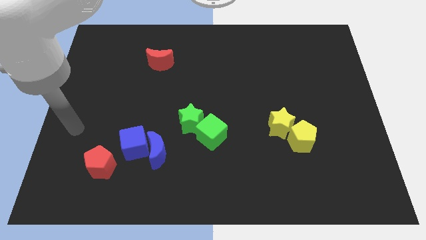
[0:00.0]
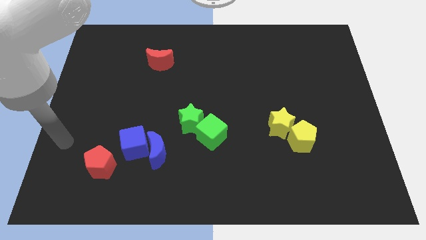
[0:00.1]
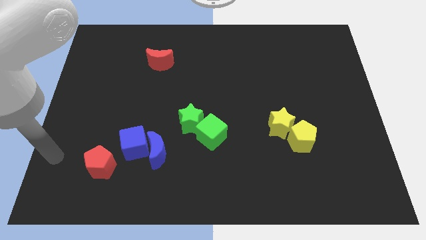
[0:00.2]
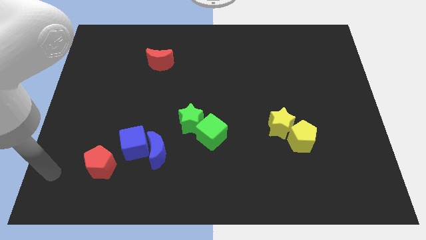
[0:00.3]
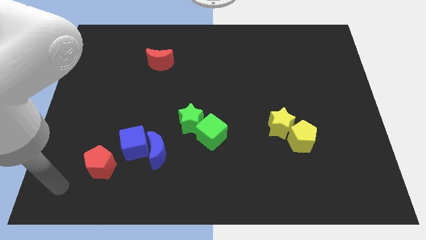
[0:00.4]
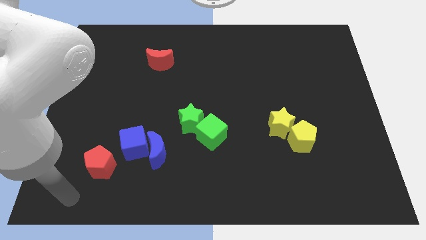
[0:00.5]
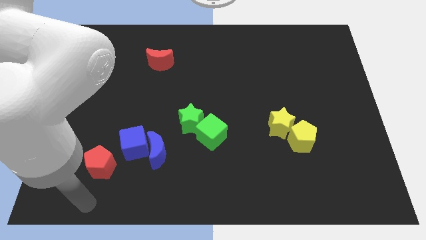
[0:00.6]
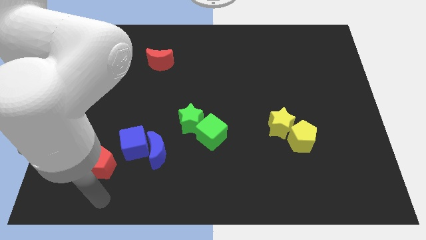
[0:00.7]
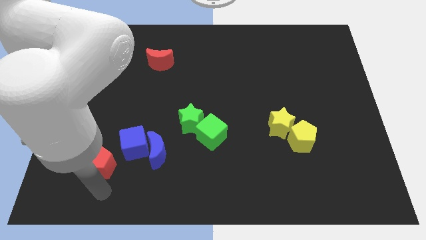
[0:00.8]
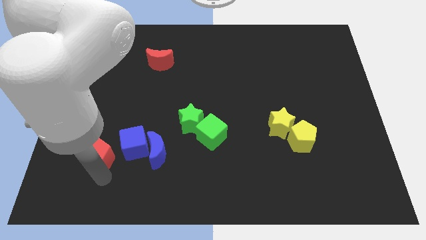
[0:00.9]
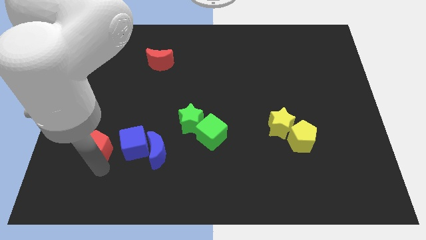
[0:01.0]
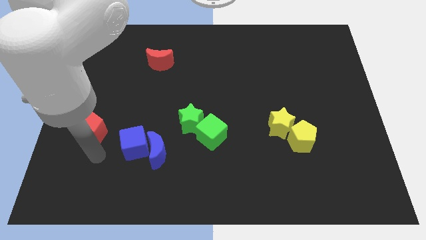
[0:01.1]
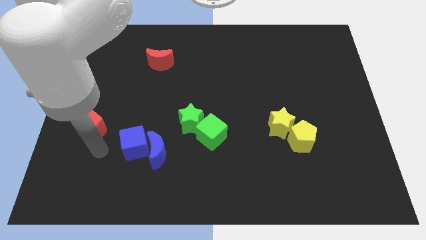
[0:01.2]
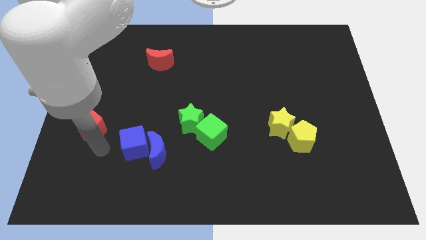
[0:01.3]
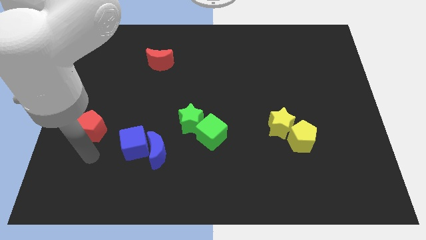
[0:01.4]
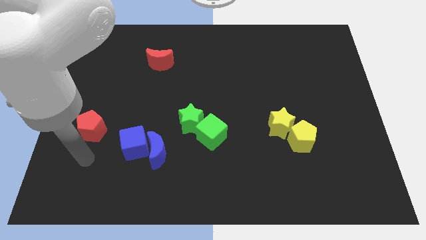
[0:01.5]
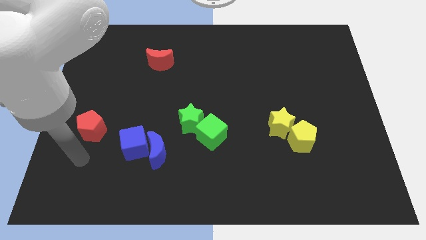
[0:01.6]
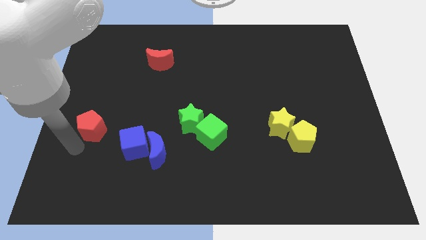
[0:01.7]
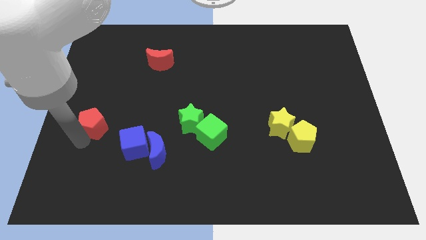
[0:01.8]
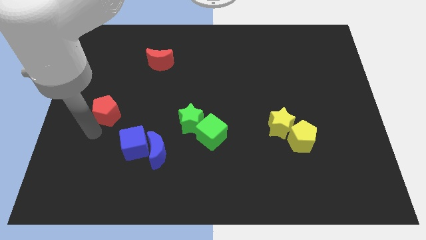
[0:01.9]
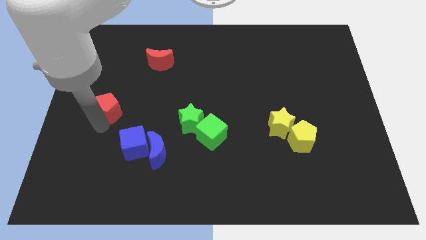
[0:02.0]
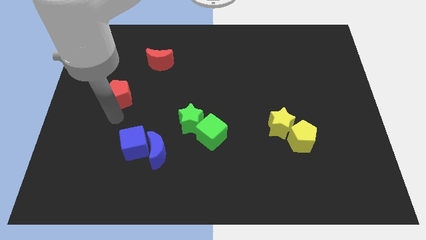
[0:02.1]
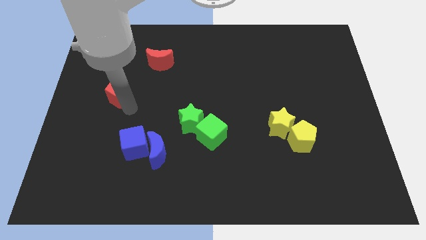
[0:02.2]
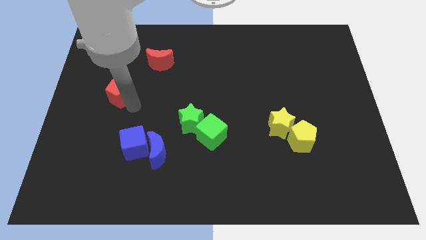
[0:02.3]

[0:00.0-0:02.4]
push red pentagon above blue cube

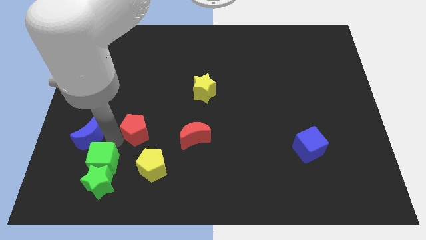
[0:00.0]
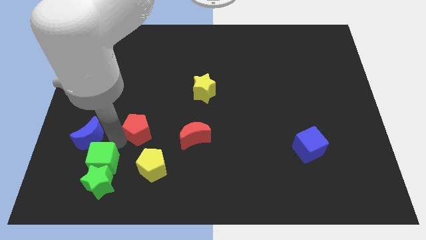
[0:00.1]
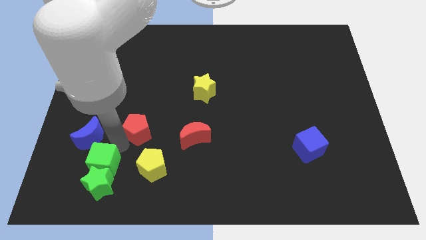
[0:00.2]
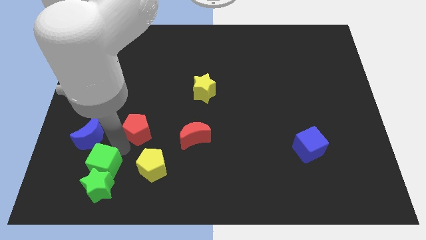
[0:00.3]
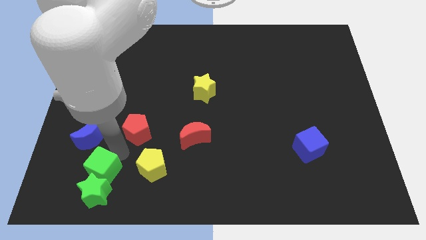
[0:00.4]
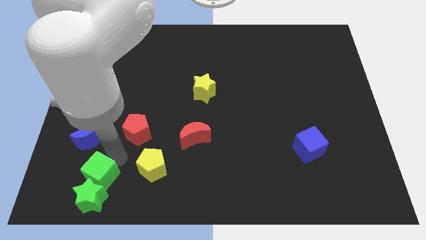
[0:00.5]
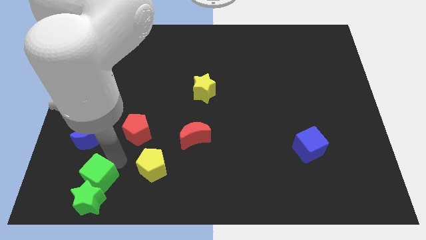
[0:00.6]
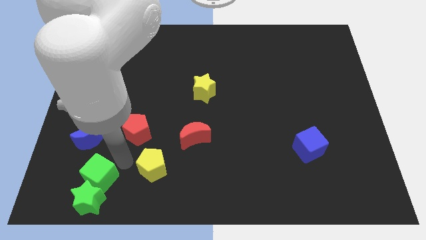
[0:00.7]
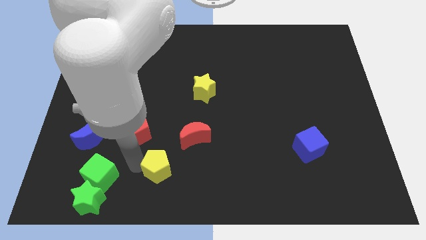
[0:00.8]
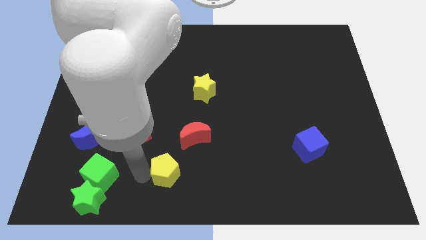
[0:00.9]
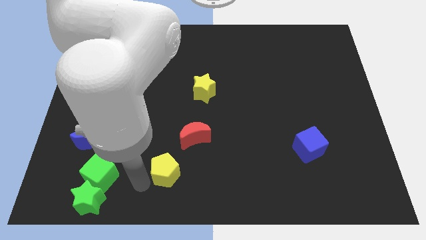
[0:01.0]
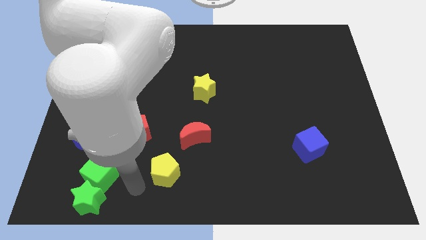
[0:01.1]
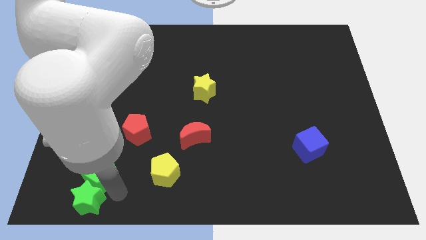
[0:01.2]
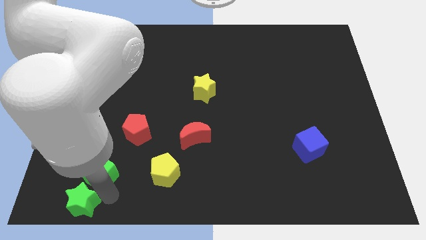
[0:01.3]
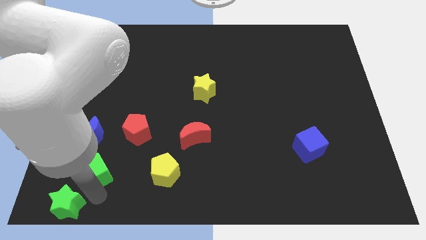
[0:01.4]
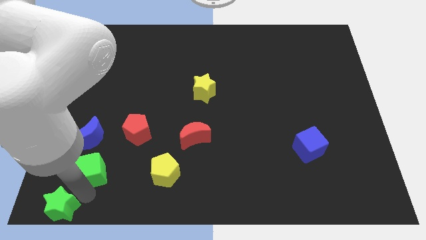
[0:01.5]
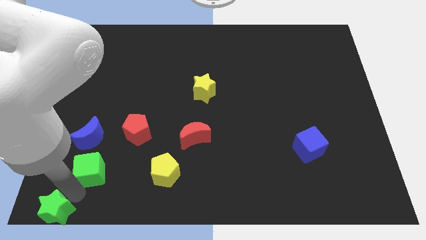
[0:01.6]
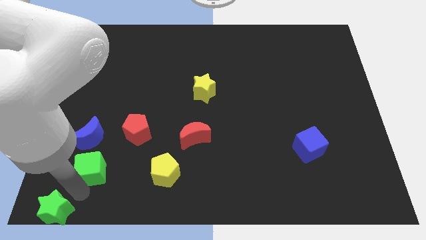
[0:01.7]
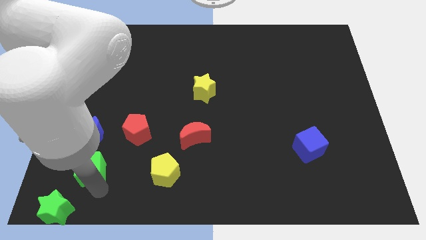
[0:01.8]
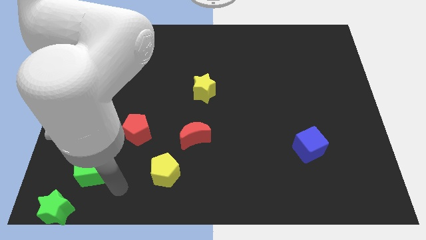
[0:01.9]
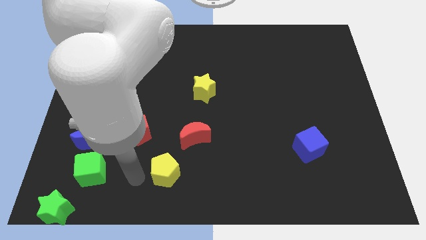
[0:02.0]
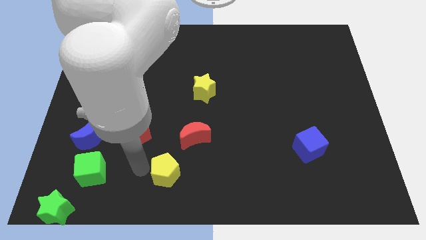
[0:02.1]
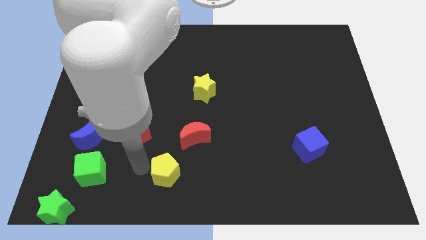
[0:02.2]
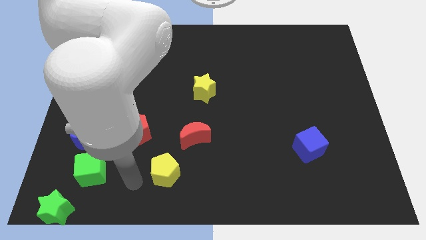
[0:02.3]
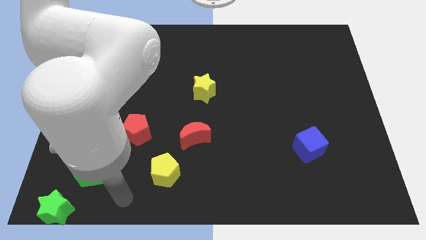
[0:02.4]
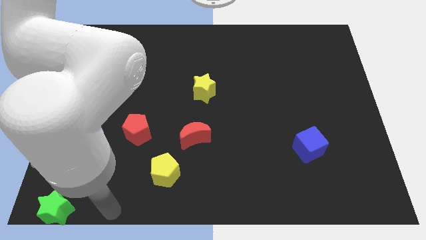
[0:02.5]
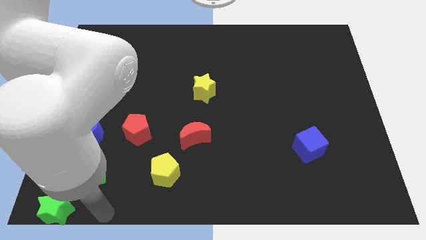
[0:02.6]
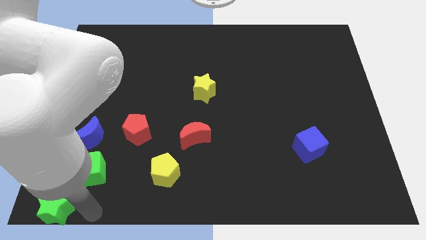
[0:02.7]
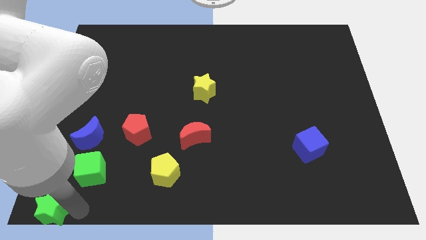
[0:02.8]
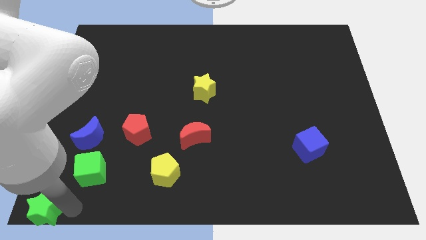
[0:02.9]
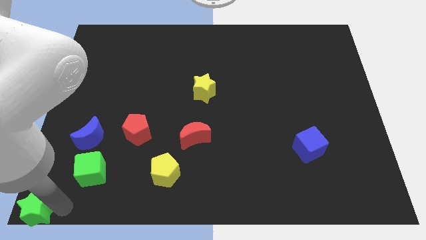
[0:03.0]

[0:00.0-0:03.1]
separate the green cube and the green star

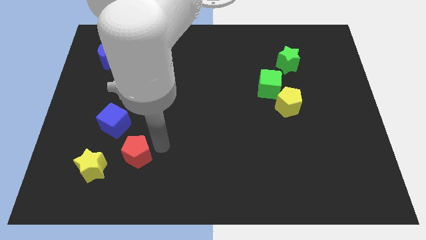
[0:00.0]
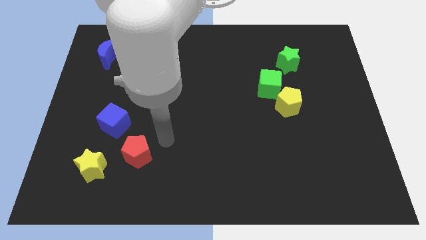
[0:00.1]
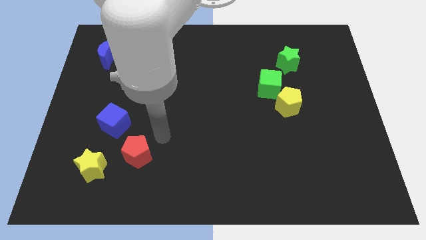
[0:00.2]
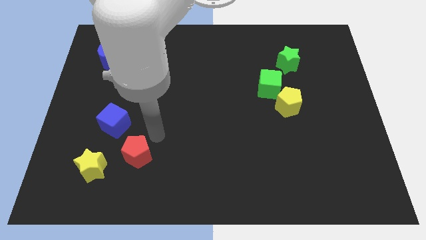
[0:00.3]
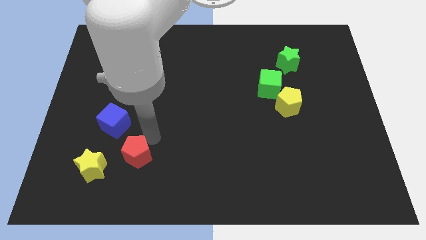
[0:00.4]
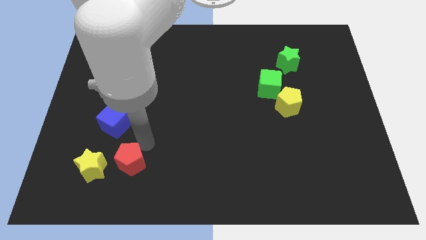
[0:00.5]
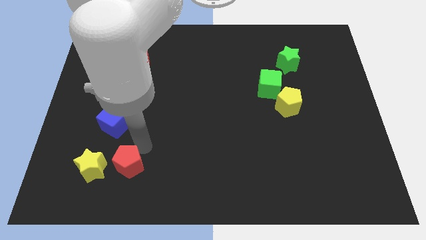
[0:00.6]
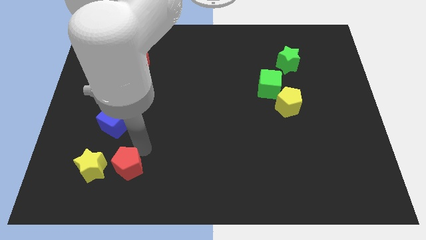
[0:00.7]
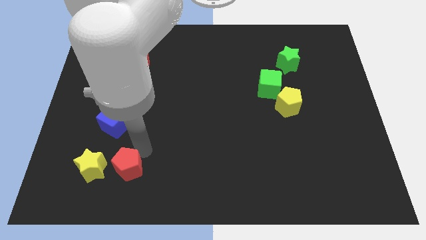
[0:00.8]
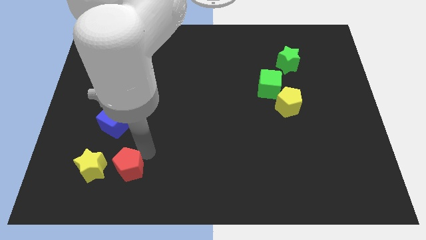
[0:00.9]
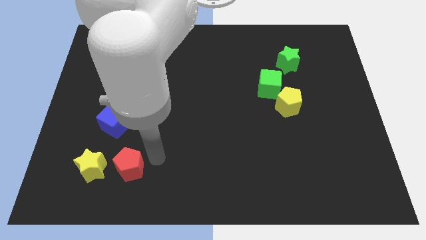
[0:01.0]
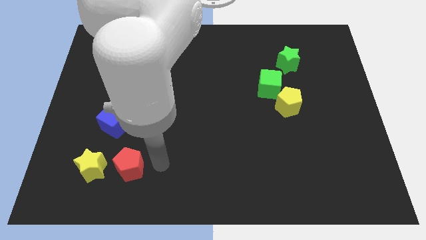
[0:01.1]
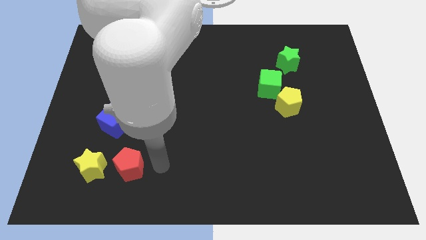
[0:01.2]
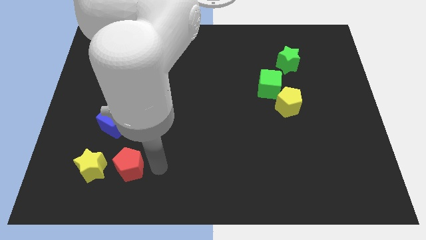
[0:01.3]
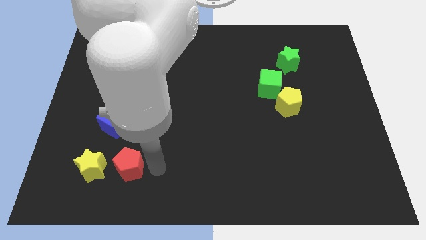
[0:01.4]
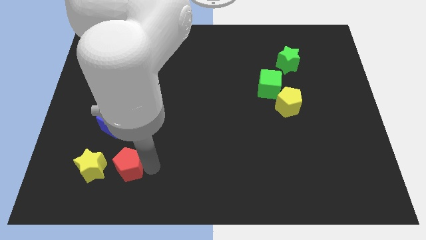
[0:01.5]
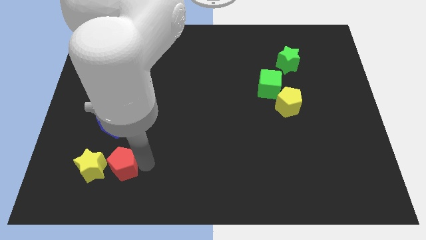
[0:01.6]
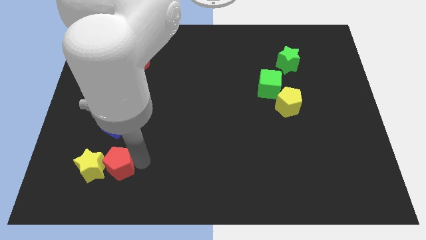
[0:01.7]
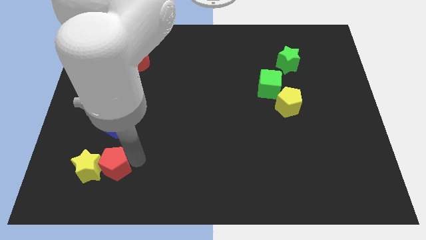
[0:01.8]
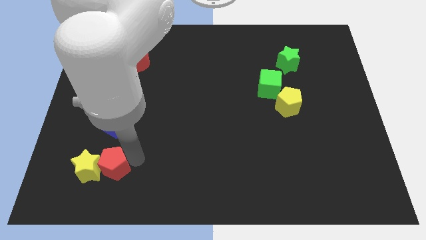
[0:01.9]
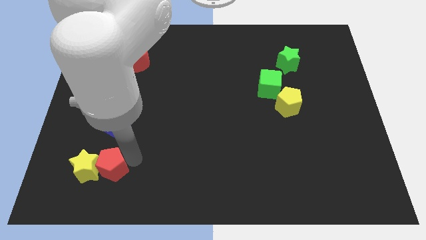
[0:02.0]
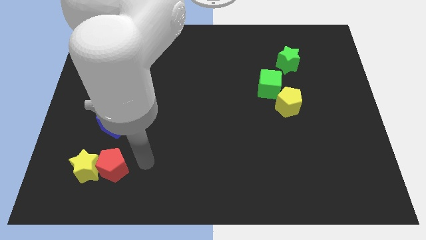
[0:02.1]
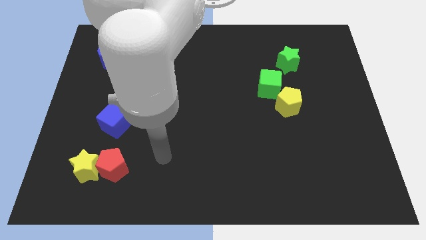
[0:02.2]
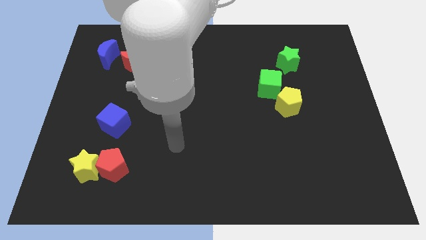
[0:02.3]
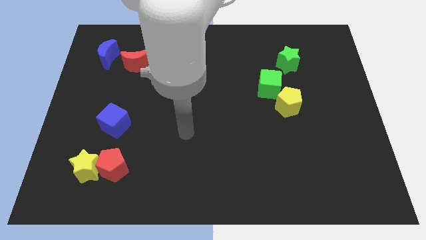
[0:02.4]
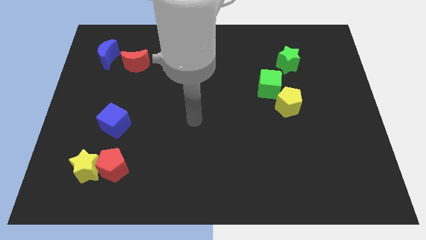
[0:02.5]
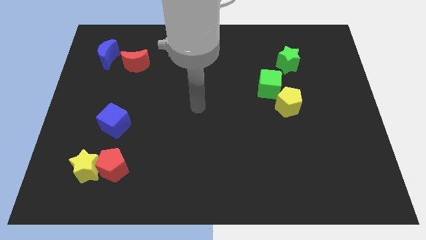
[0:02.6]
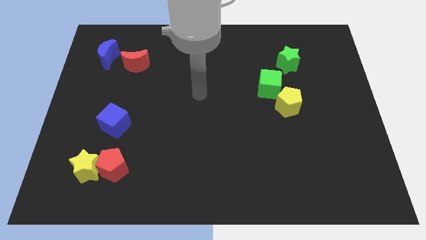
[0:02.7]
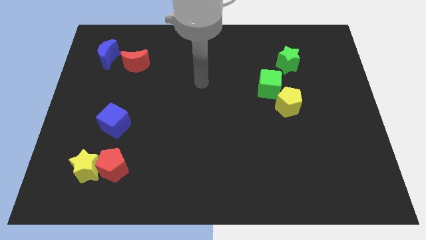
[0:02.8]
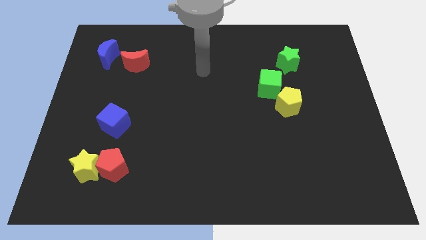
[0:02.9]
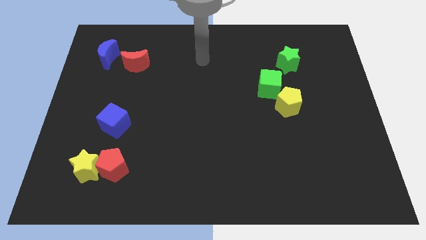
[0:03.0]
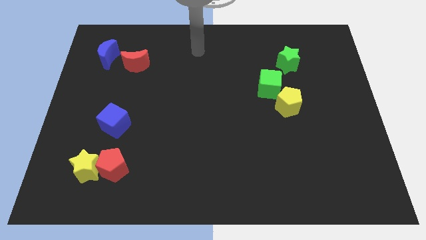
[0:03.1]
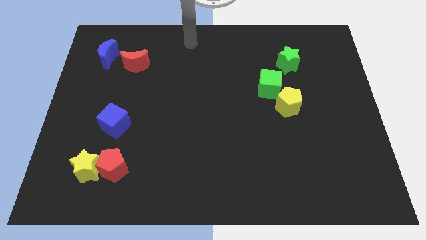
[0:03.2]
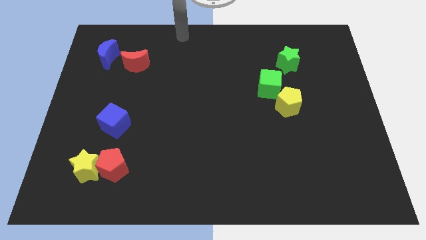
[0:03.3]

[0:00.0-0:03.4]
push the red pentagon into the yellow star
